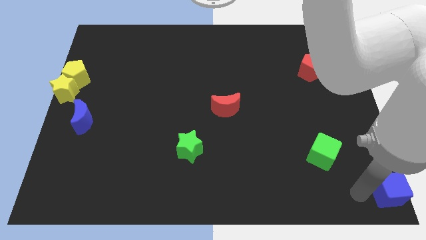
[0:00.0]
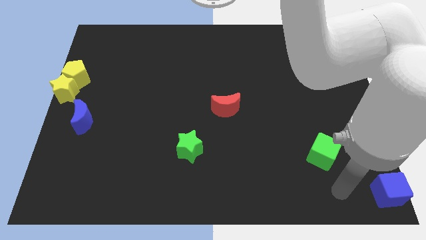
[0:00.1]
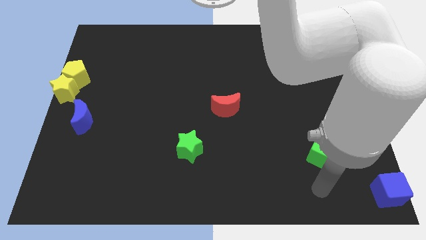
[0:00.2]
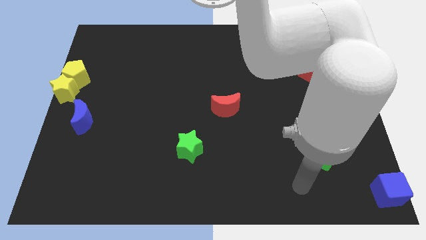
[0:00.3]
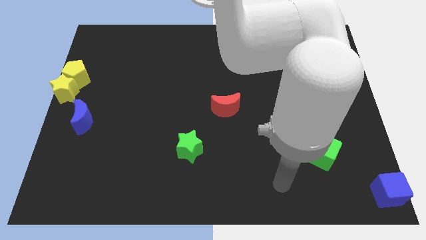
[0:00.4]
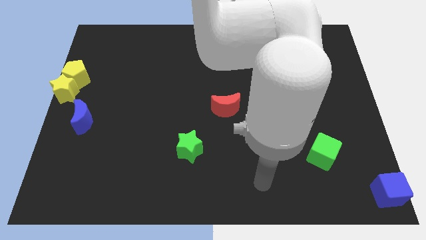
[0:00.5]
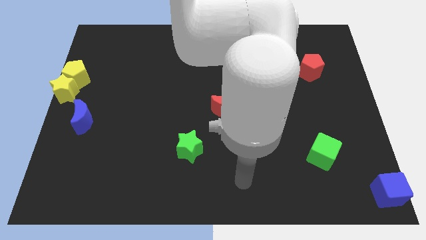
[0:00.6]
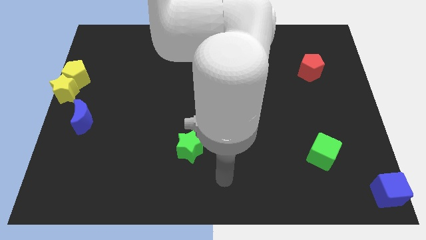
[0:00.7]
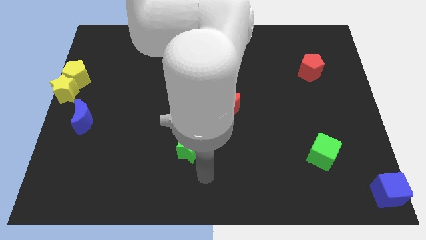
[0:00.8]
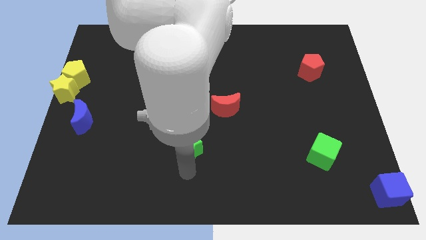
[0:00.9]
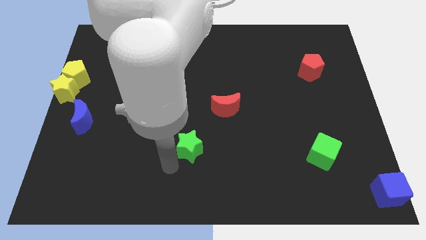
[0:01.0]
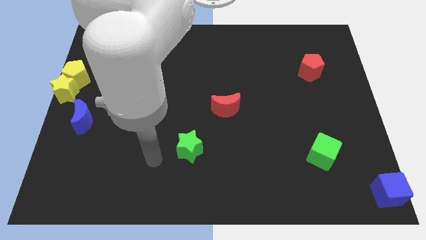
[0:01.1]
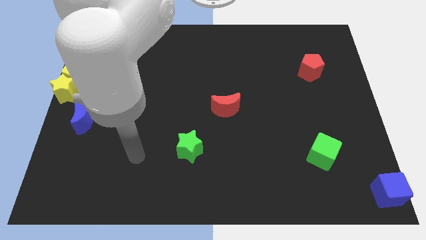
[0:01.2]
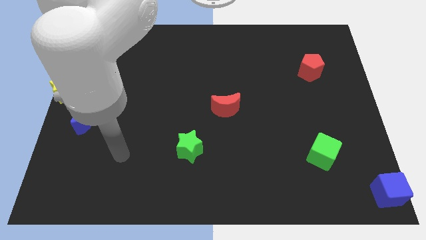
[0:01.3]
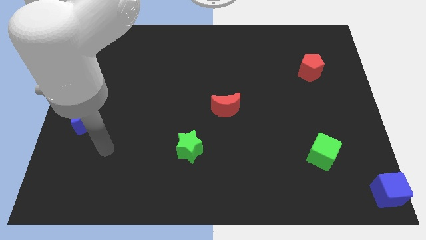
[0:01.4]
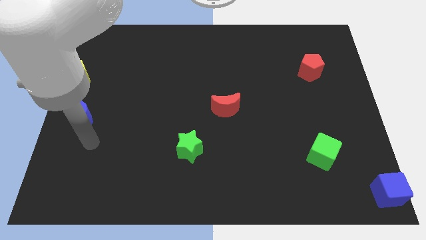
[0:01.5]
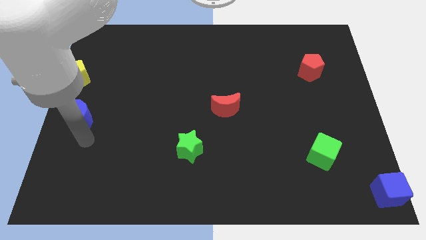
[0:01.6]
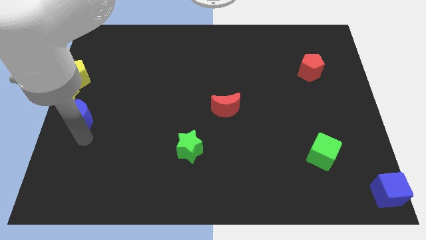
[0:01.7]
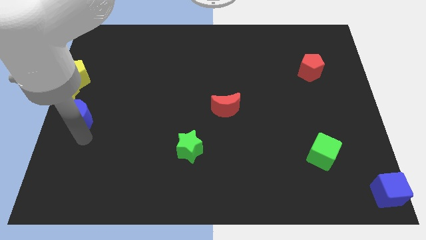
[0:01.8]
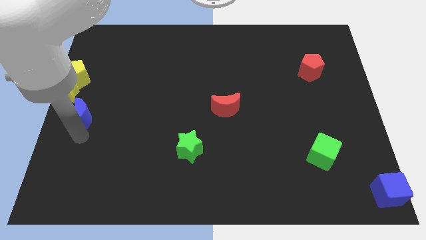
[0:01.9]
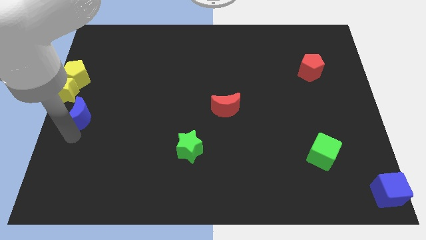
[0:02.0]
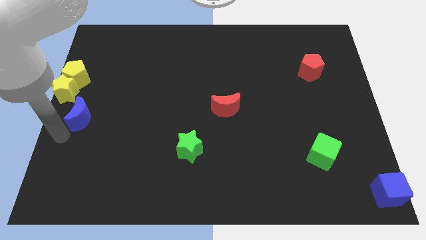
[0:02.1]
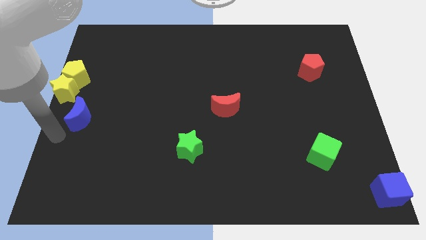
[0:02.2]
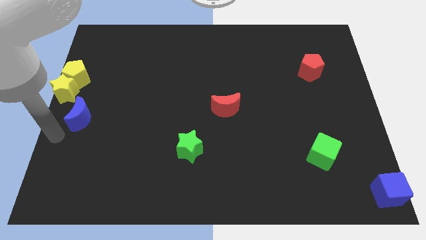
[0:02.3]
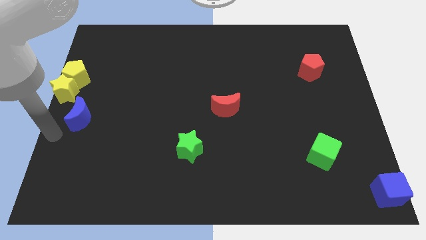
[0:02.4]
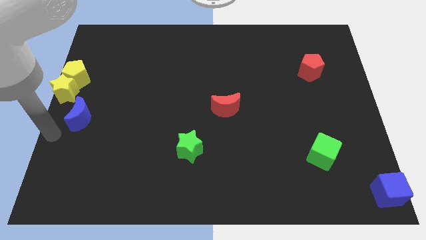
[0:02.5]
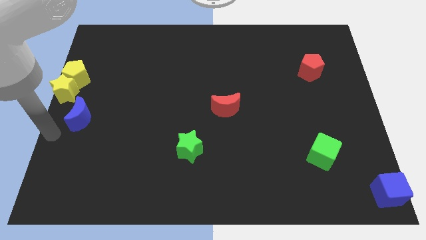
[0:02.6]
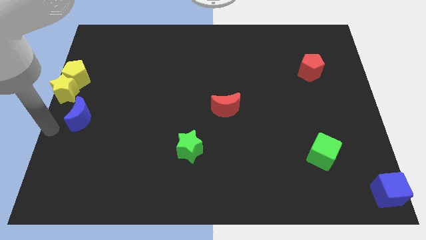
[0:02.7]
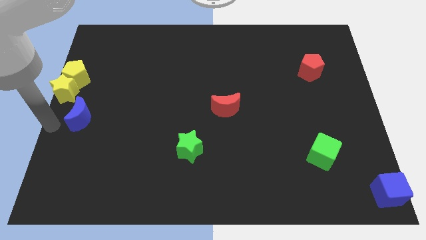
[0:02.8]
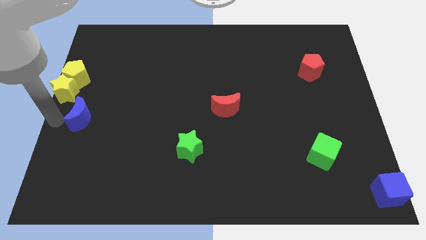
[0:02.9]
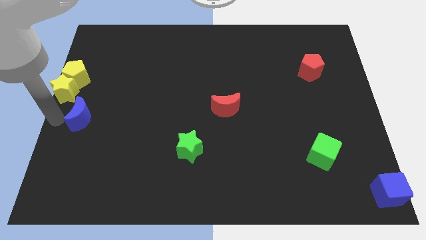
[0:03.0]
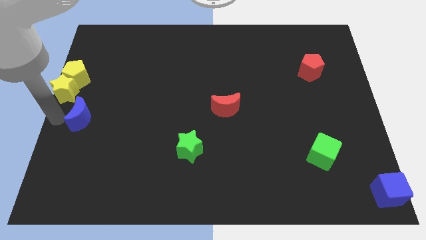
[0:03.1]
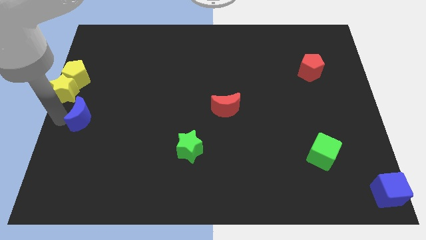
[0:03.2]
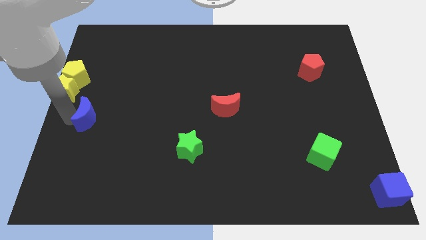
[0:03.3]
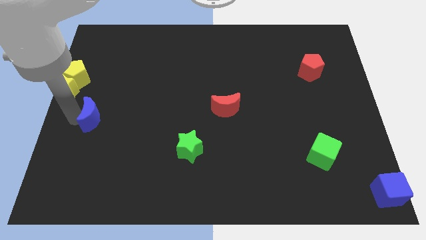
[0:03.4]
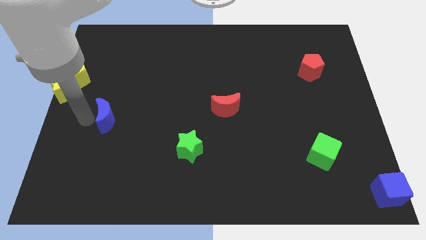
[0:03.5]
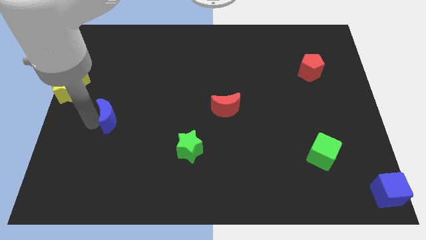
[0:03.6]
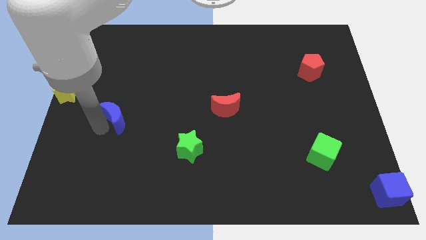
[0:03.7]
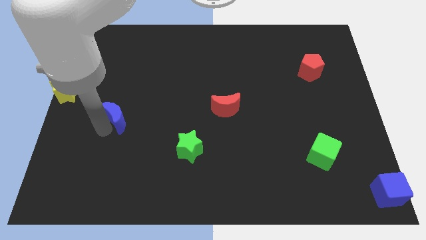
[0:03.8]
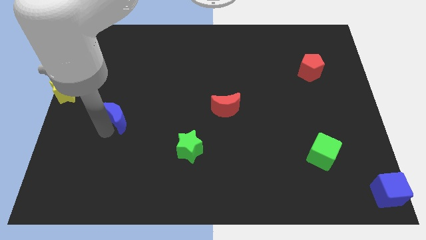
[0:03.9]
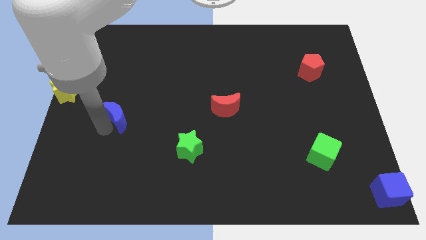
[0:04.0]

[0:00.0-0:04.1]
slide the blue crescent to the right side of the board

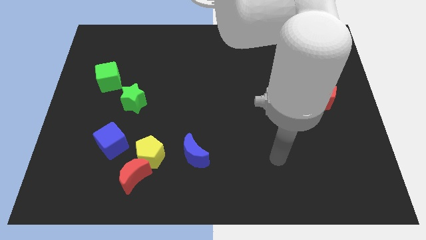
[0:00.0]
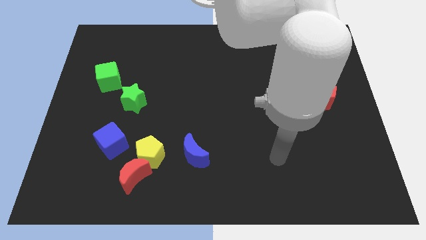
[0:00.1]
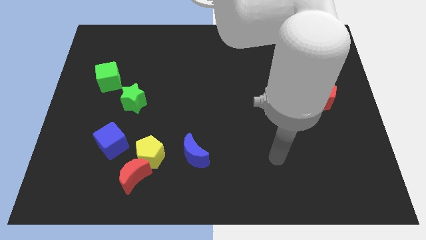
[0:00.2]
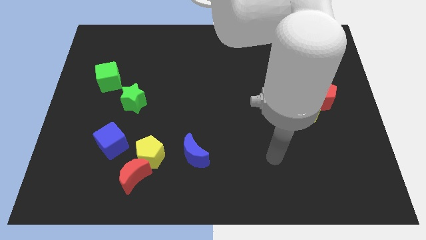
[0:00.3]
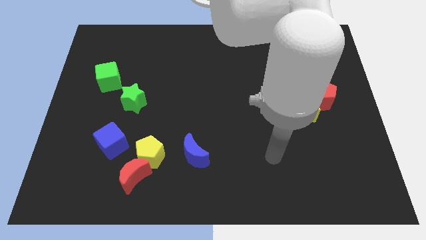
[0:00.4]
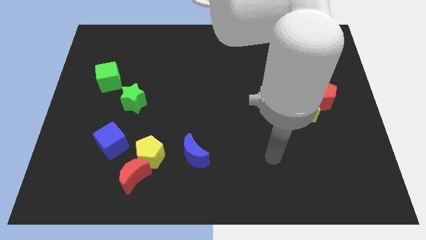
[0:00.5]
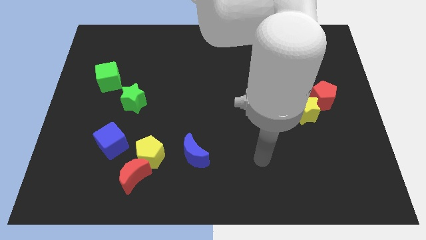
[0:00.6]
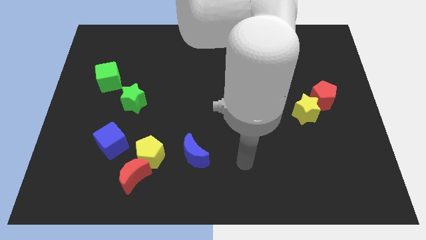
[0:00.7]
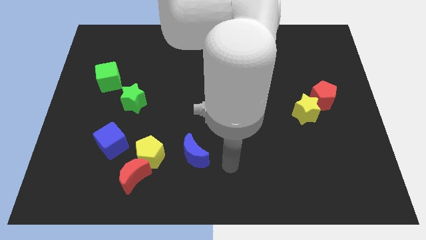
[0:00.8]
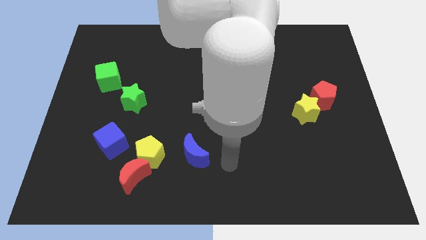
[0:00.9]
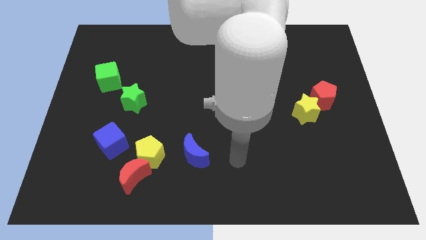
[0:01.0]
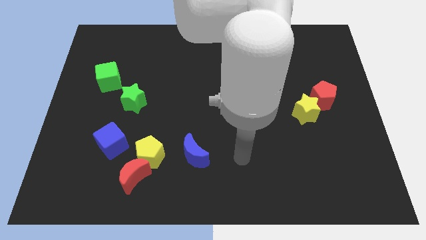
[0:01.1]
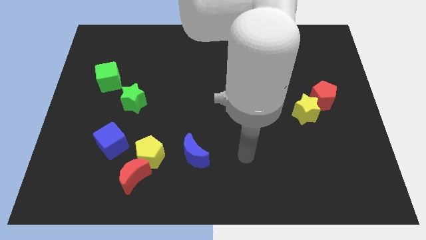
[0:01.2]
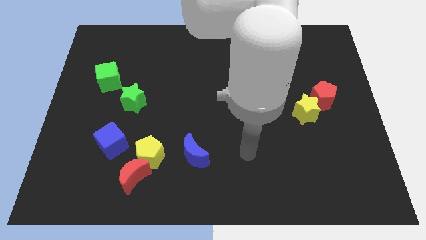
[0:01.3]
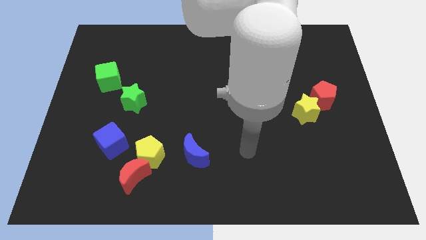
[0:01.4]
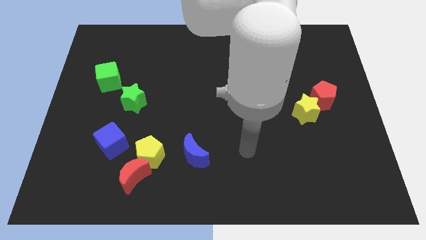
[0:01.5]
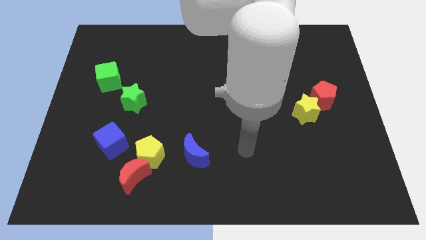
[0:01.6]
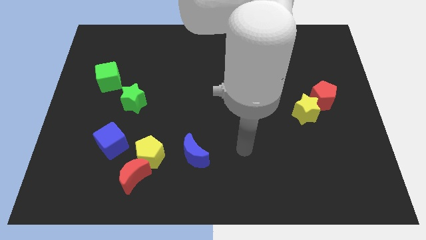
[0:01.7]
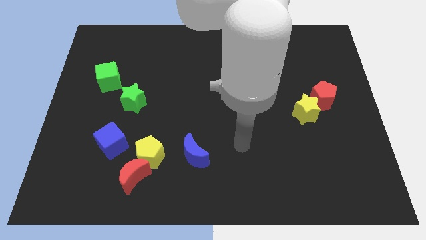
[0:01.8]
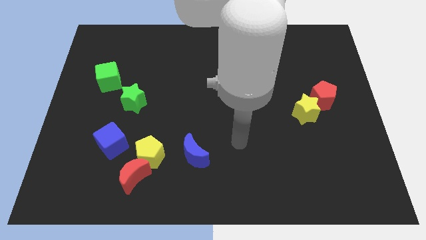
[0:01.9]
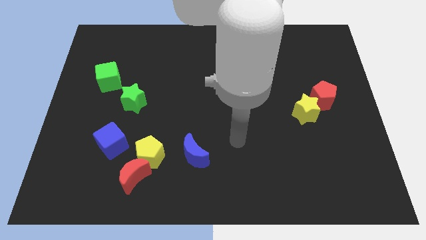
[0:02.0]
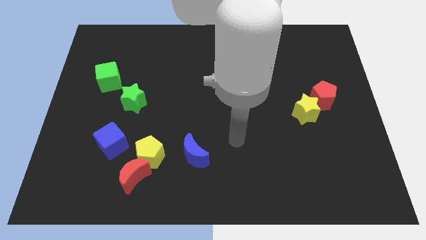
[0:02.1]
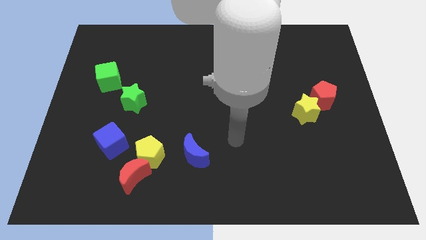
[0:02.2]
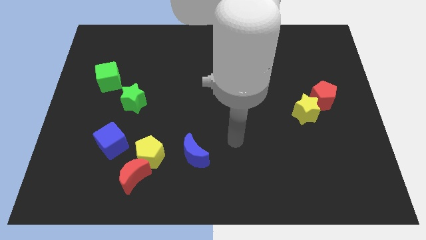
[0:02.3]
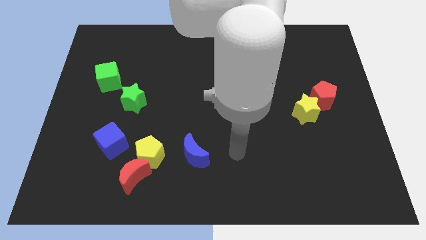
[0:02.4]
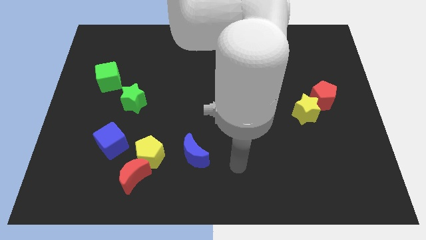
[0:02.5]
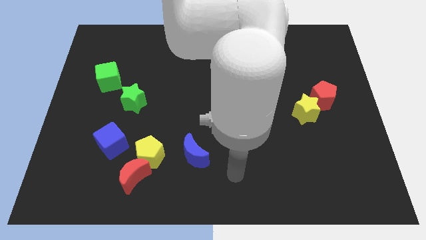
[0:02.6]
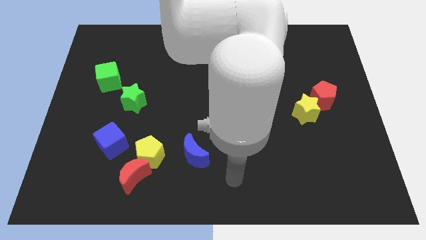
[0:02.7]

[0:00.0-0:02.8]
move the blue moon diagonally to the blue moon

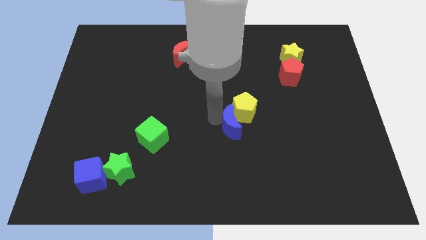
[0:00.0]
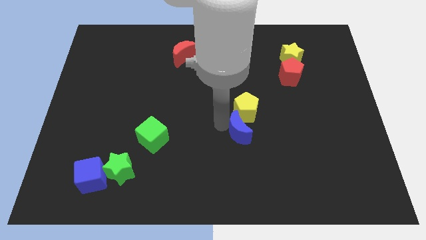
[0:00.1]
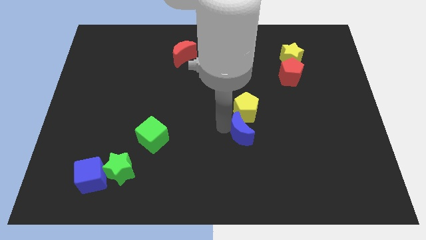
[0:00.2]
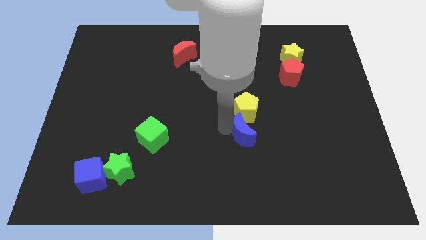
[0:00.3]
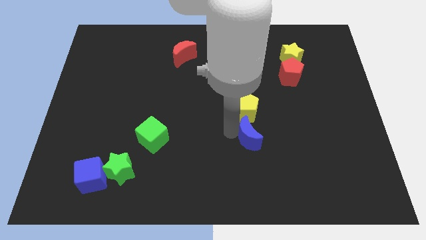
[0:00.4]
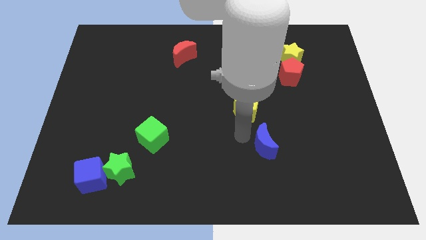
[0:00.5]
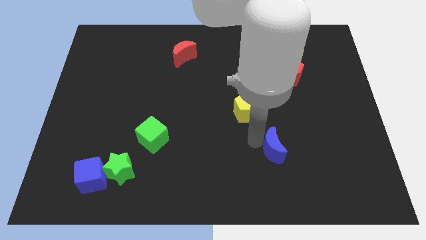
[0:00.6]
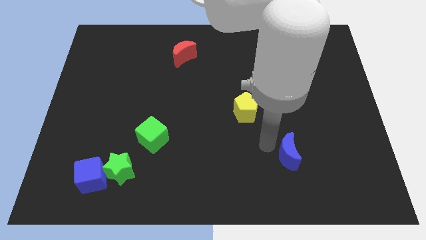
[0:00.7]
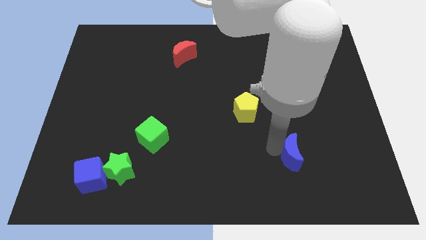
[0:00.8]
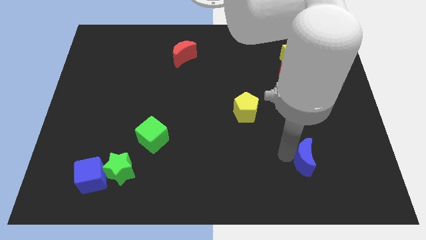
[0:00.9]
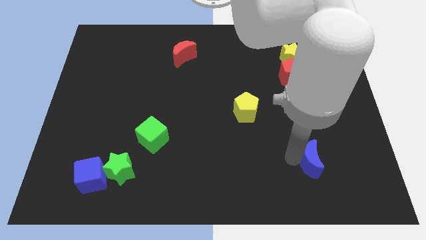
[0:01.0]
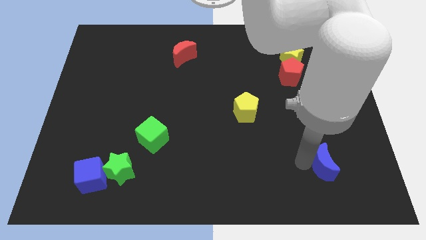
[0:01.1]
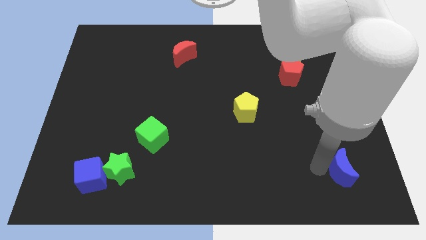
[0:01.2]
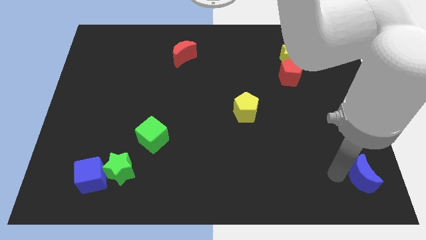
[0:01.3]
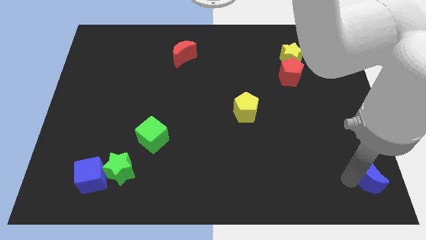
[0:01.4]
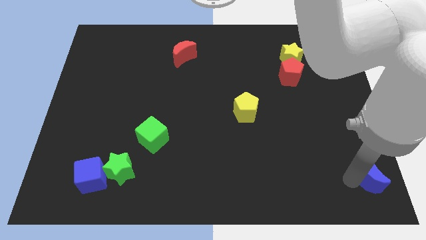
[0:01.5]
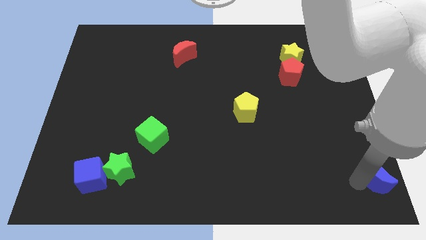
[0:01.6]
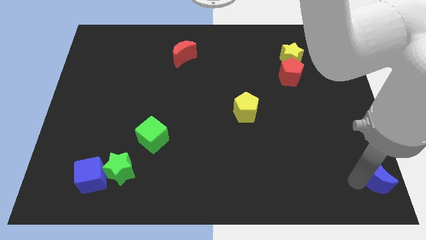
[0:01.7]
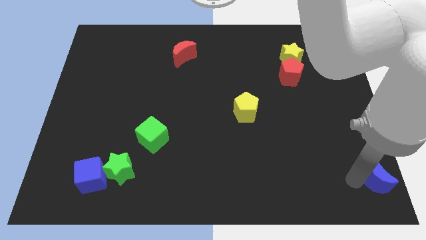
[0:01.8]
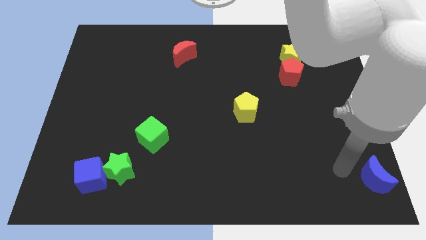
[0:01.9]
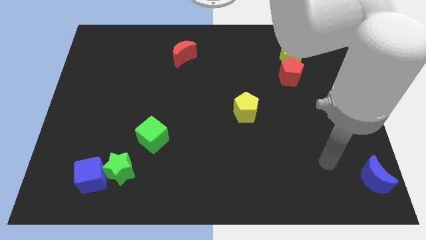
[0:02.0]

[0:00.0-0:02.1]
place blue crescent to the bottom right of the board
